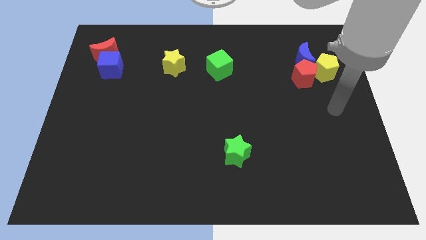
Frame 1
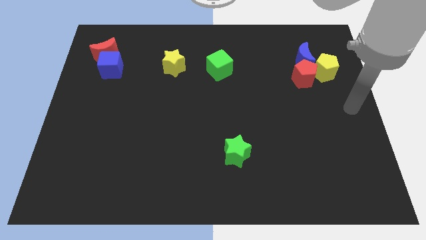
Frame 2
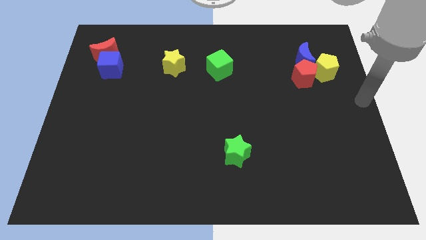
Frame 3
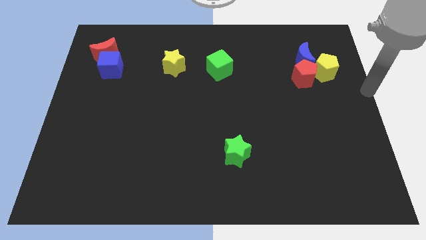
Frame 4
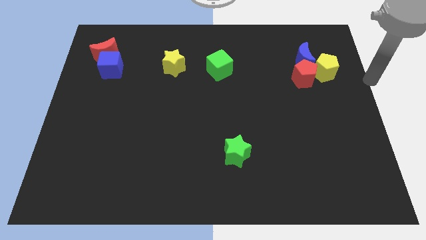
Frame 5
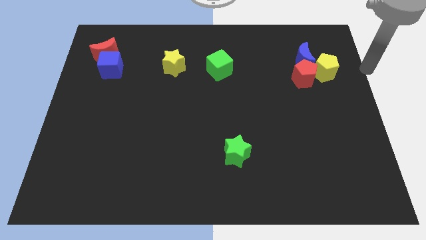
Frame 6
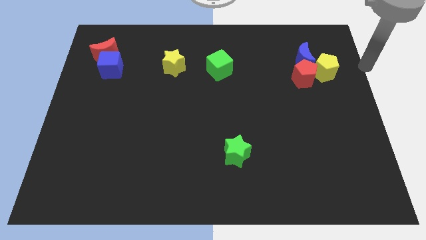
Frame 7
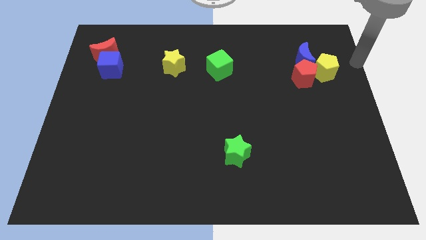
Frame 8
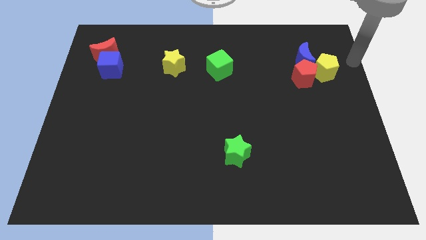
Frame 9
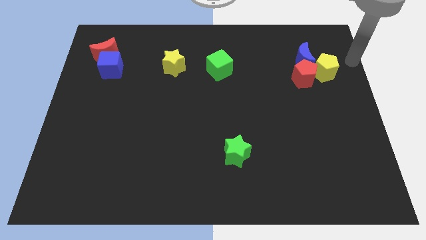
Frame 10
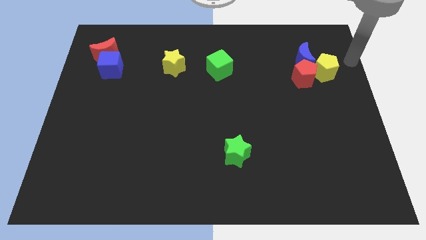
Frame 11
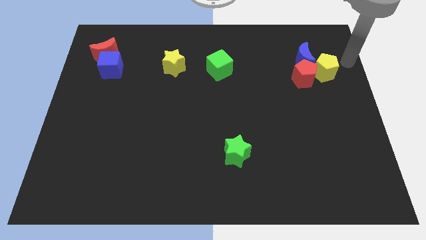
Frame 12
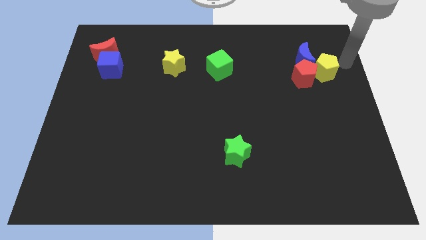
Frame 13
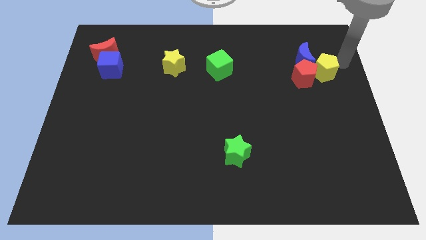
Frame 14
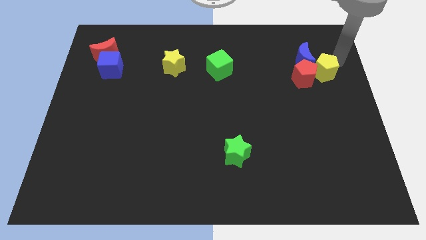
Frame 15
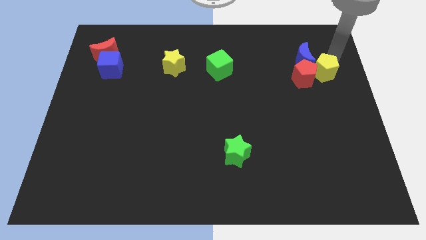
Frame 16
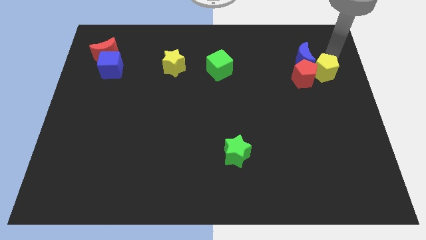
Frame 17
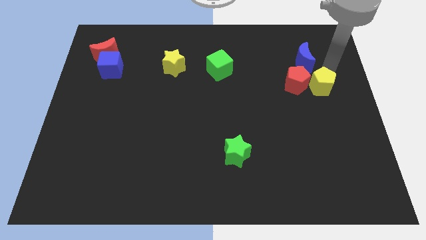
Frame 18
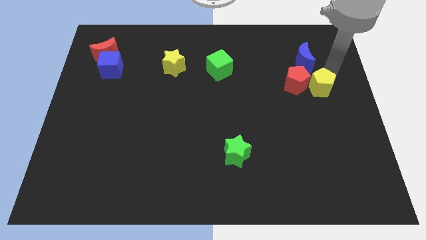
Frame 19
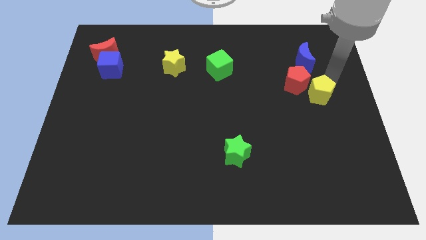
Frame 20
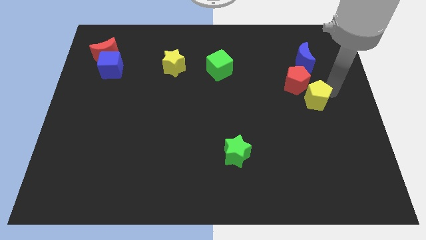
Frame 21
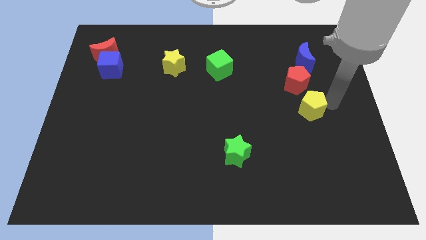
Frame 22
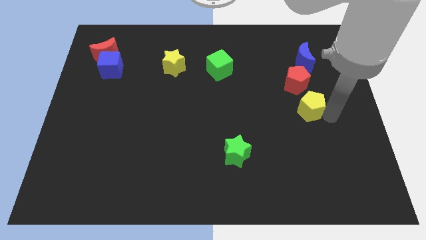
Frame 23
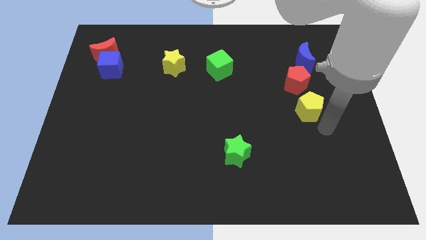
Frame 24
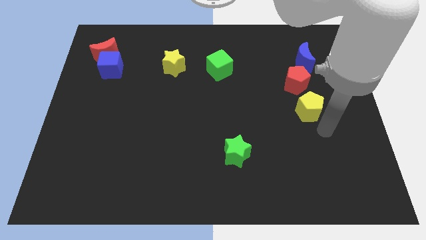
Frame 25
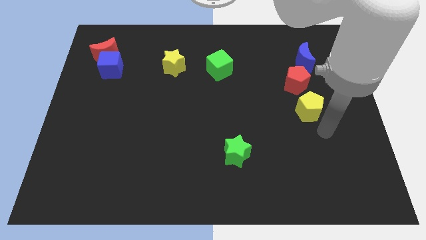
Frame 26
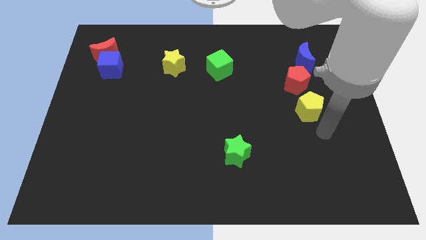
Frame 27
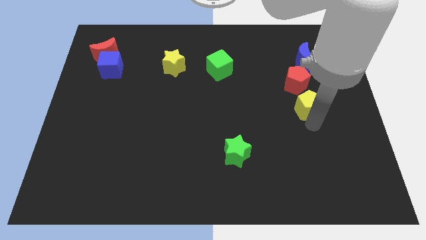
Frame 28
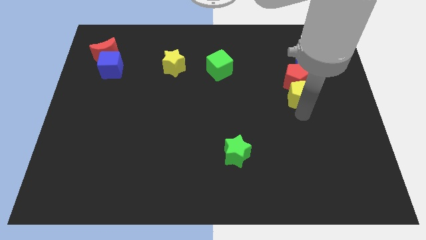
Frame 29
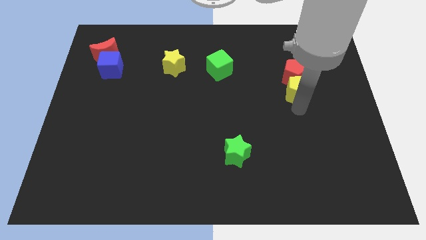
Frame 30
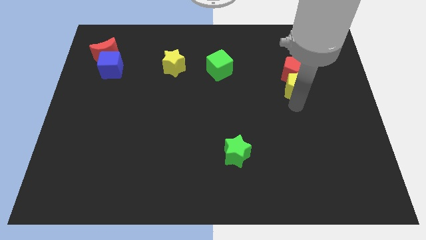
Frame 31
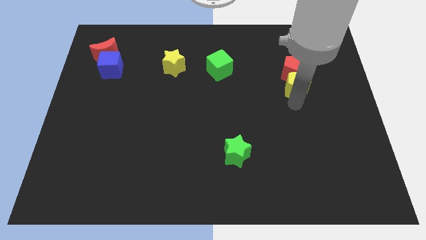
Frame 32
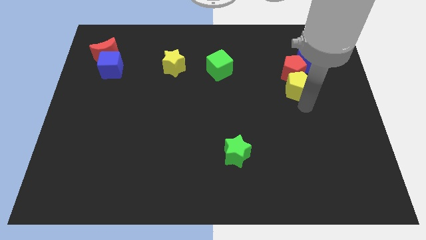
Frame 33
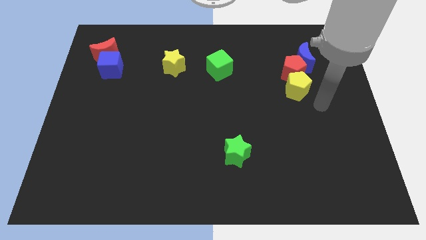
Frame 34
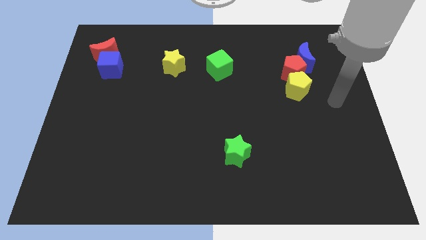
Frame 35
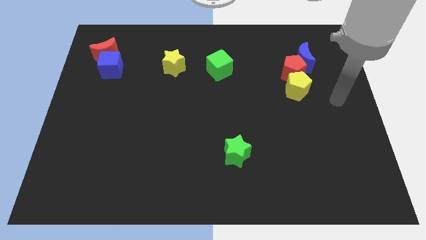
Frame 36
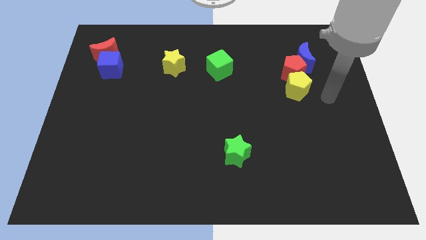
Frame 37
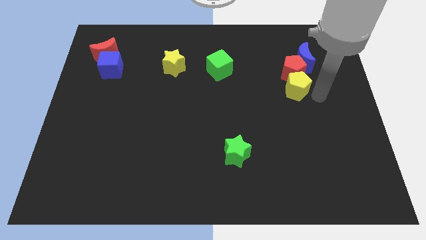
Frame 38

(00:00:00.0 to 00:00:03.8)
push yellow pentagon below red pentagon

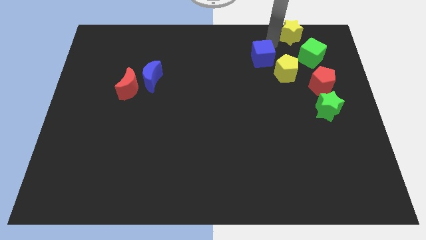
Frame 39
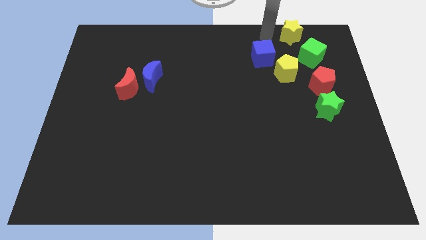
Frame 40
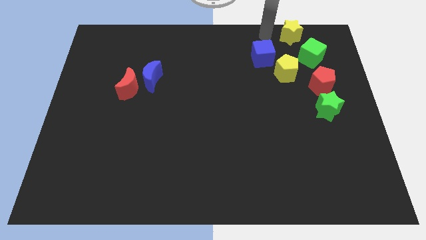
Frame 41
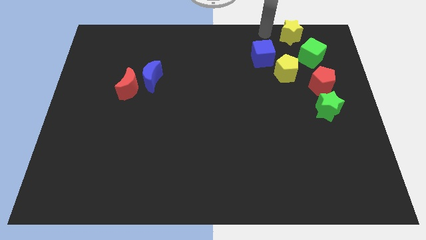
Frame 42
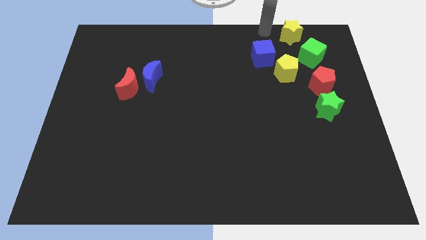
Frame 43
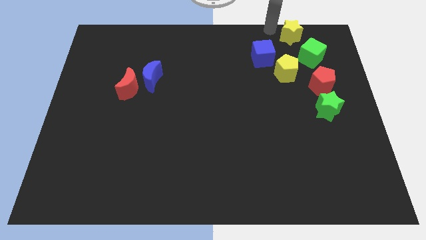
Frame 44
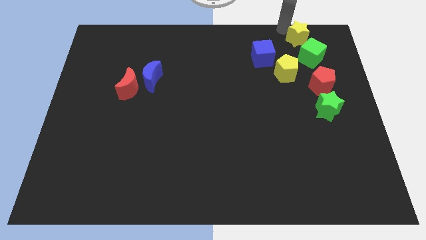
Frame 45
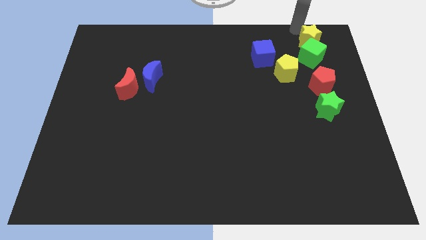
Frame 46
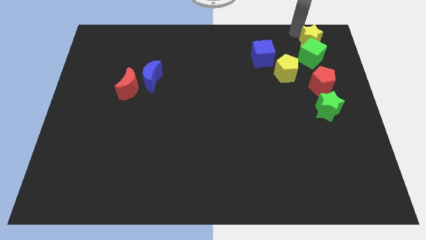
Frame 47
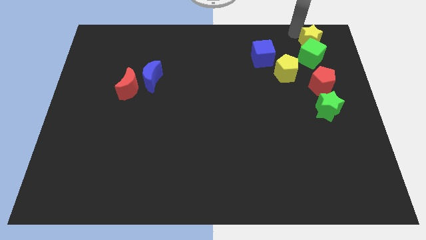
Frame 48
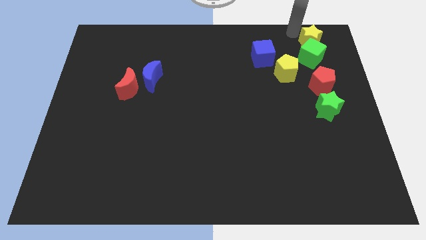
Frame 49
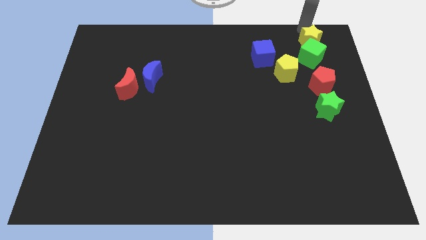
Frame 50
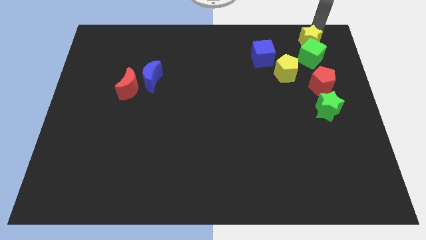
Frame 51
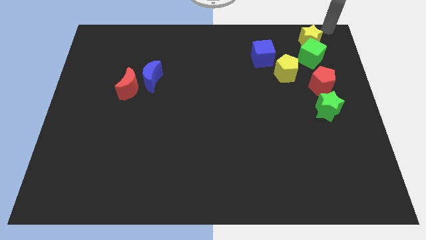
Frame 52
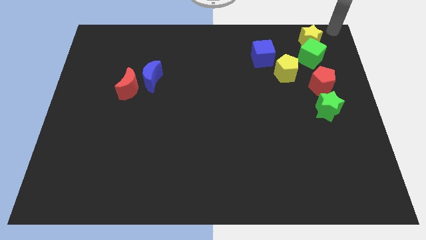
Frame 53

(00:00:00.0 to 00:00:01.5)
push the yellow star to the top of the green cube

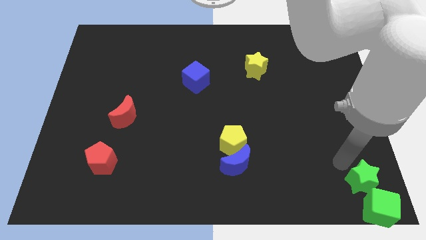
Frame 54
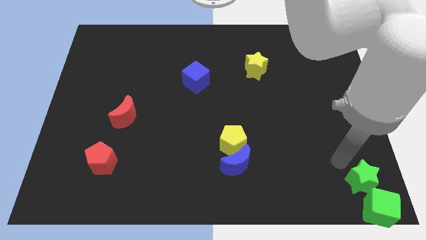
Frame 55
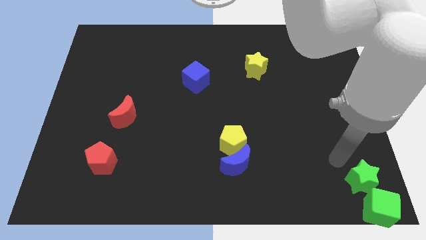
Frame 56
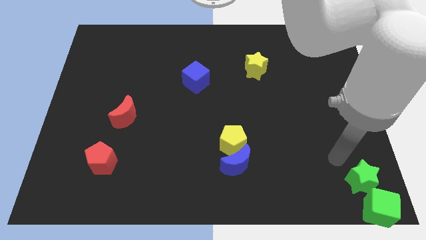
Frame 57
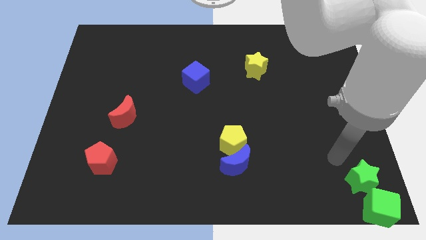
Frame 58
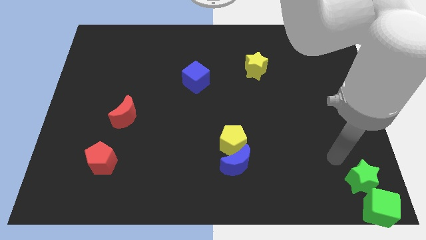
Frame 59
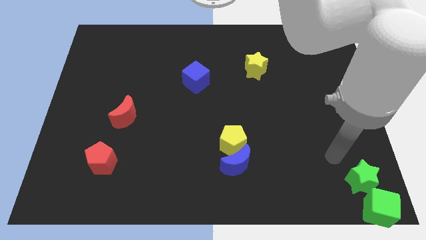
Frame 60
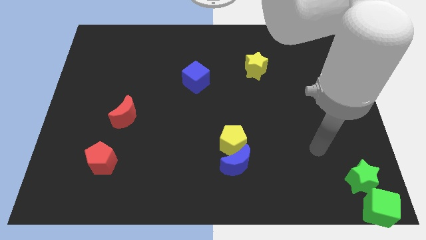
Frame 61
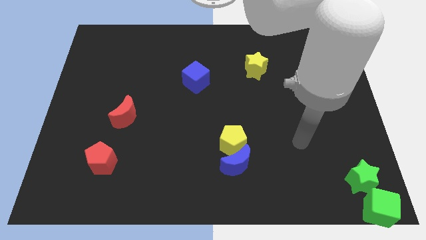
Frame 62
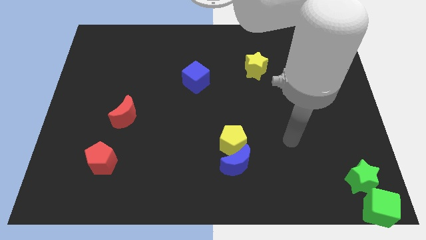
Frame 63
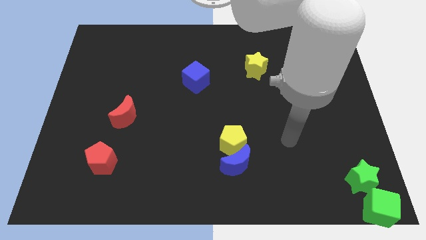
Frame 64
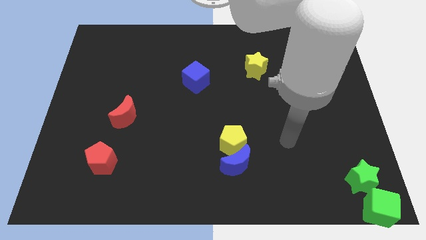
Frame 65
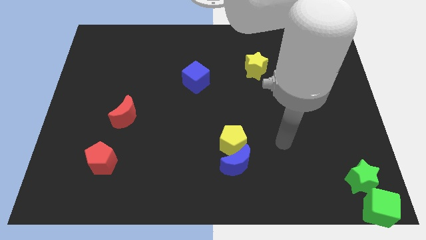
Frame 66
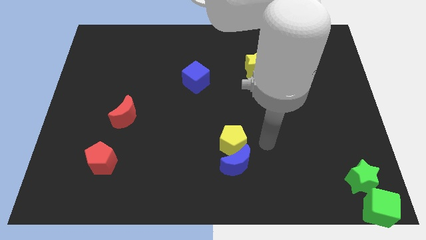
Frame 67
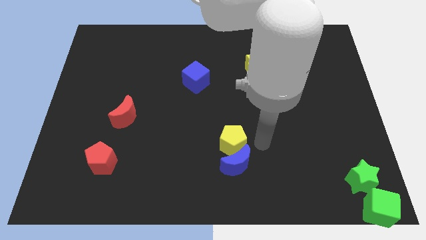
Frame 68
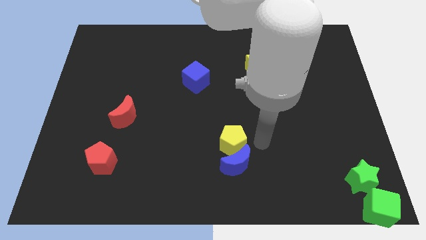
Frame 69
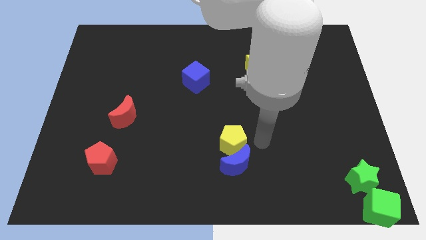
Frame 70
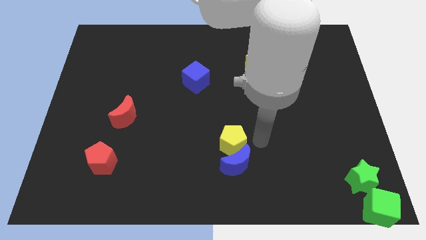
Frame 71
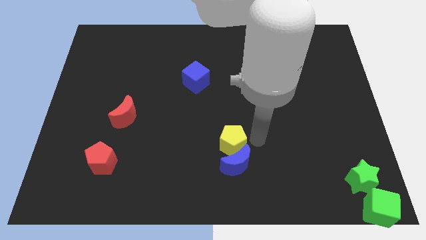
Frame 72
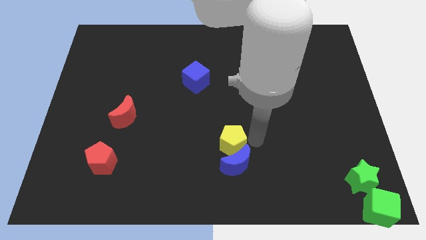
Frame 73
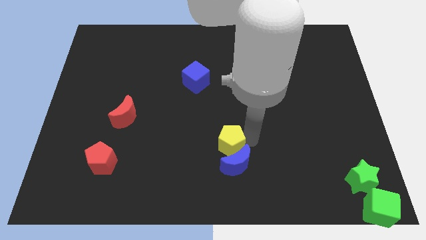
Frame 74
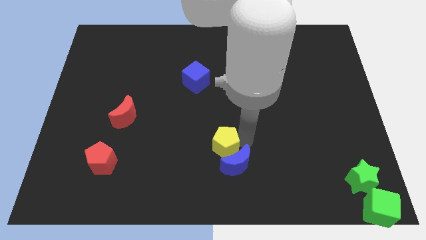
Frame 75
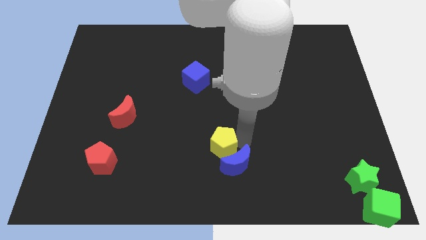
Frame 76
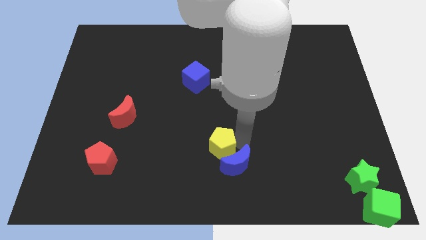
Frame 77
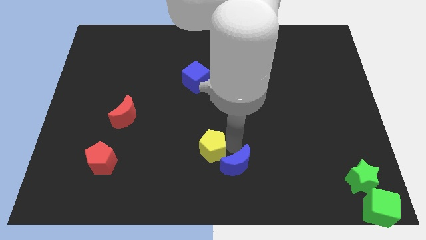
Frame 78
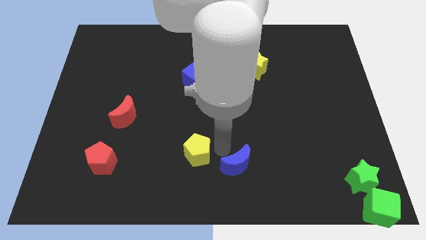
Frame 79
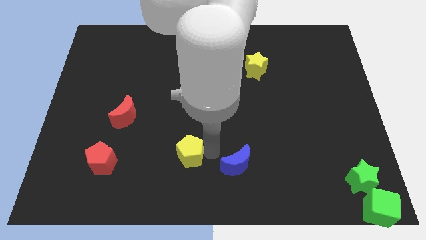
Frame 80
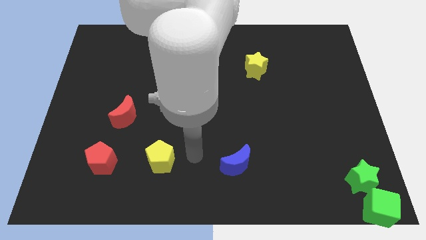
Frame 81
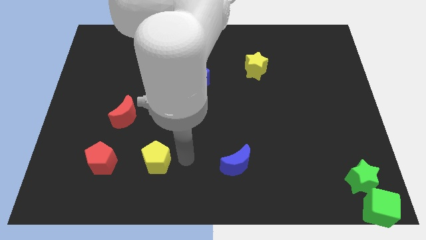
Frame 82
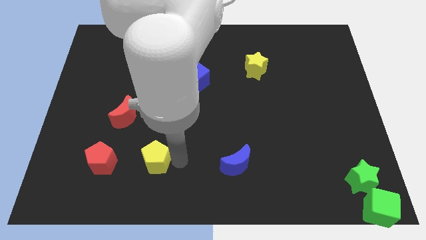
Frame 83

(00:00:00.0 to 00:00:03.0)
move your arm and push the yellow pentagon to the right of the red pentagon

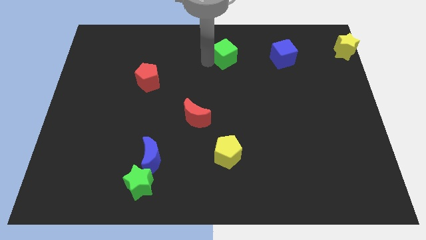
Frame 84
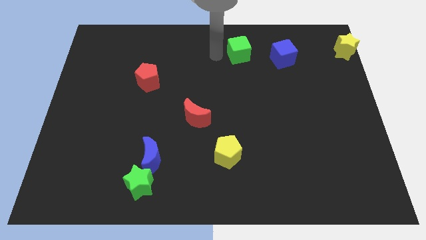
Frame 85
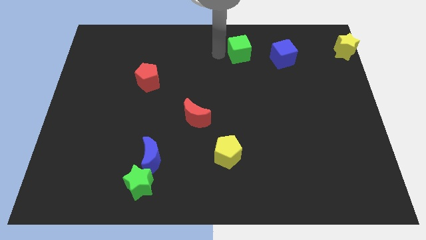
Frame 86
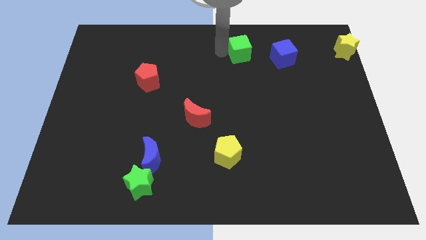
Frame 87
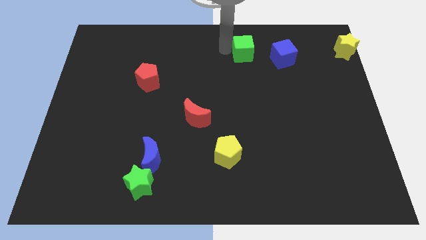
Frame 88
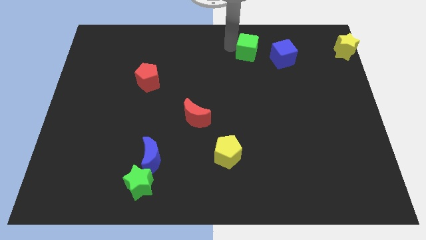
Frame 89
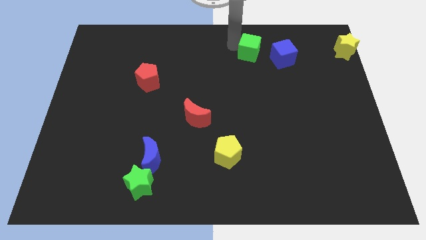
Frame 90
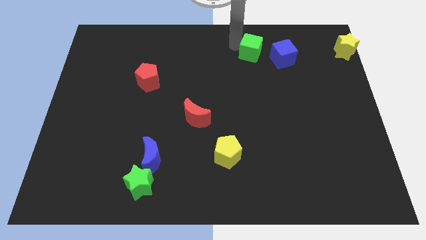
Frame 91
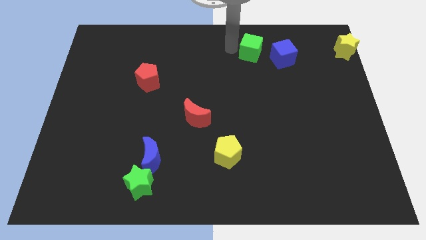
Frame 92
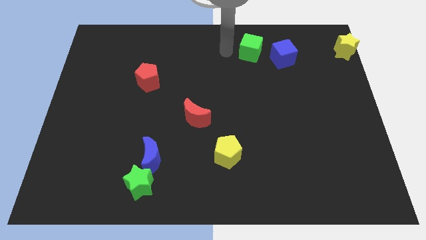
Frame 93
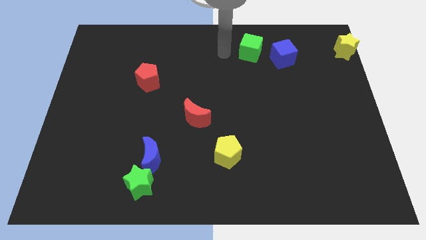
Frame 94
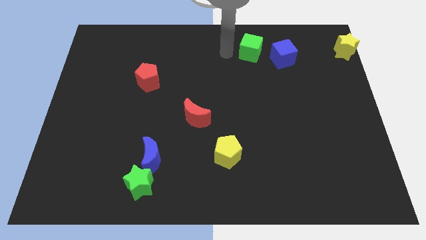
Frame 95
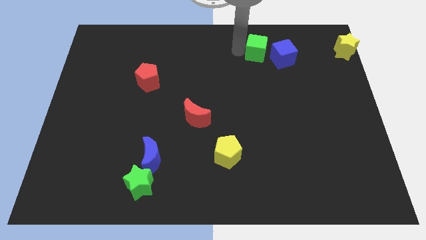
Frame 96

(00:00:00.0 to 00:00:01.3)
move the green cube close to the blue cube
